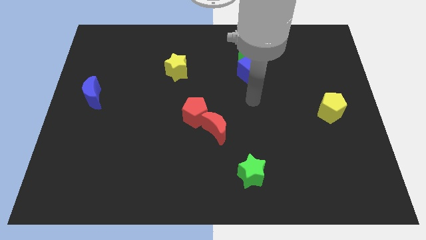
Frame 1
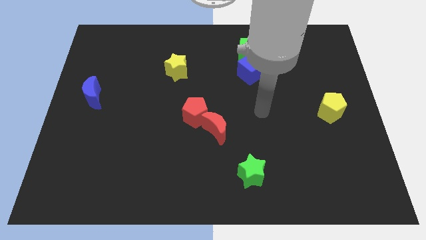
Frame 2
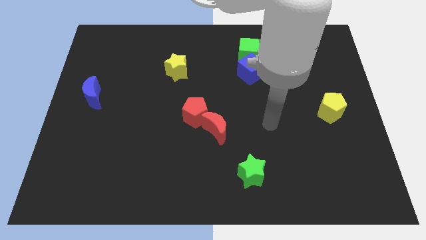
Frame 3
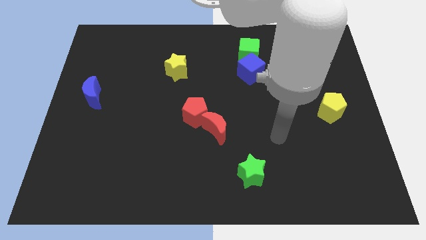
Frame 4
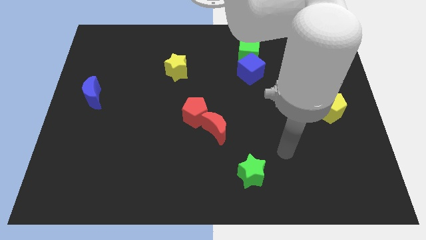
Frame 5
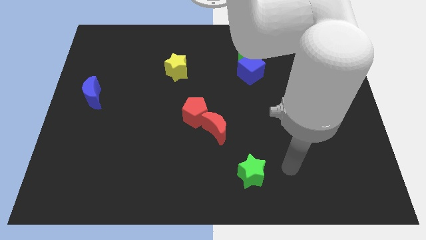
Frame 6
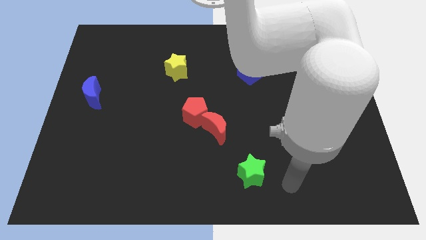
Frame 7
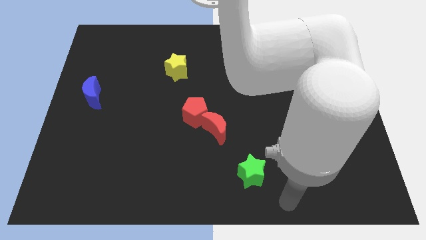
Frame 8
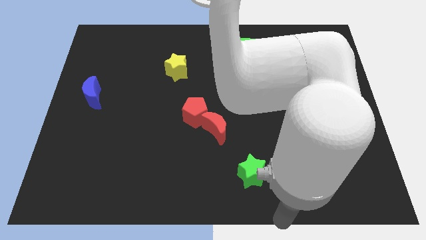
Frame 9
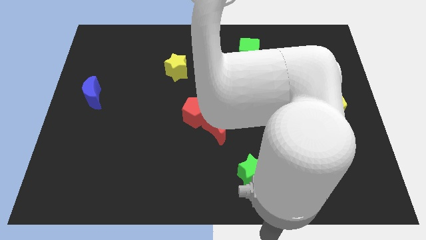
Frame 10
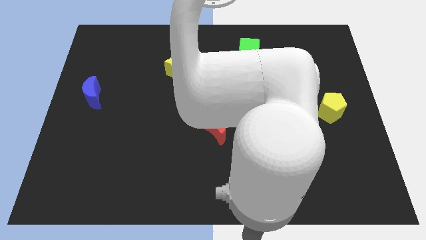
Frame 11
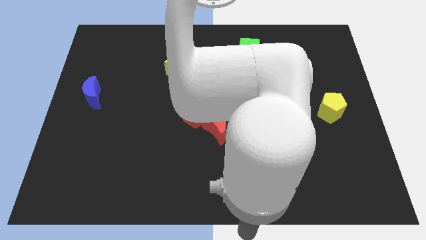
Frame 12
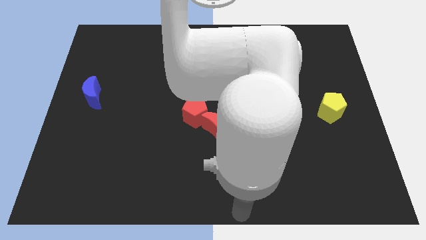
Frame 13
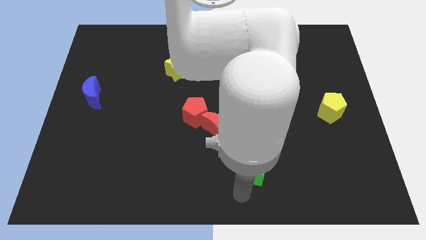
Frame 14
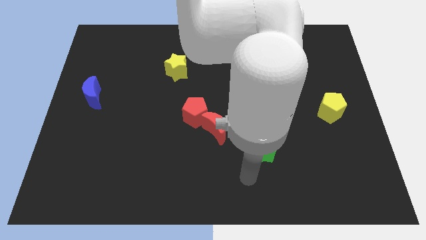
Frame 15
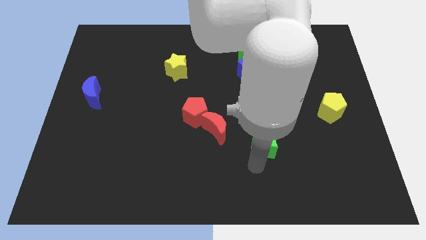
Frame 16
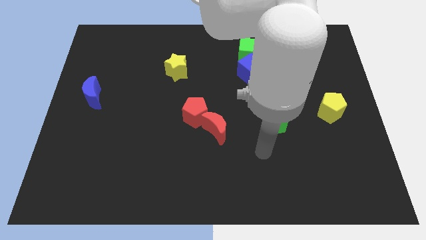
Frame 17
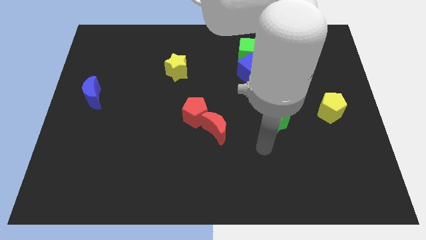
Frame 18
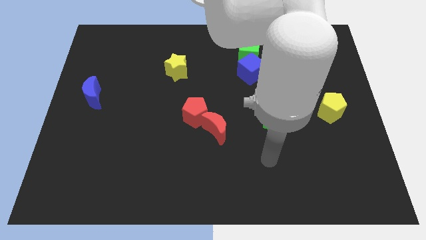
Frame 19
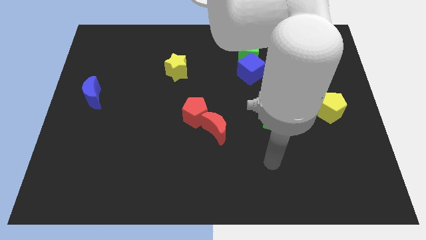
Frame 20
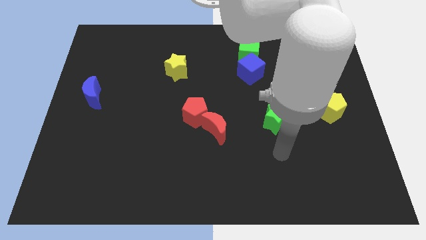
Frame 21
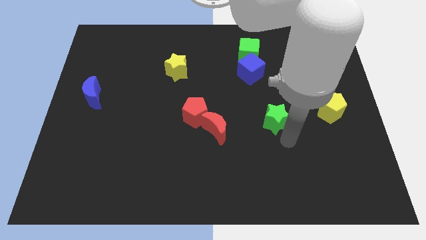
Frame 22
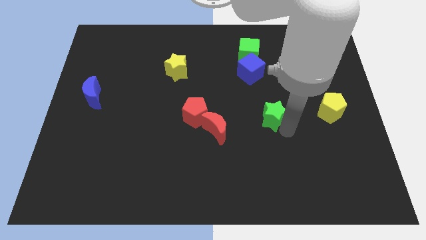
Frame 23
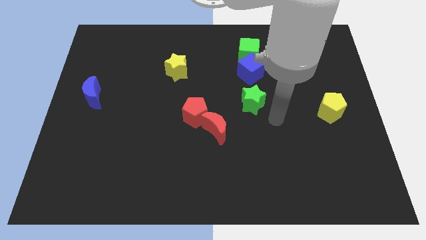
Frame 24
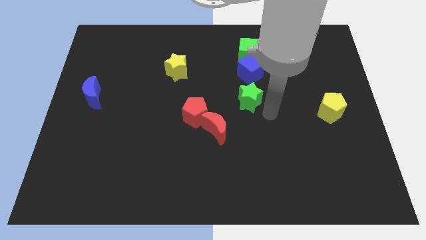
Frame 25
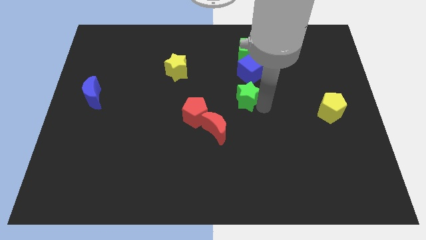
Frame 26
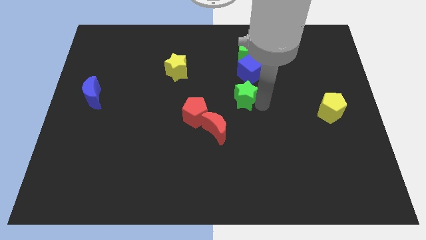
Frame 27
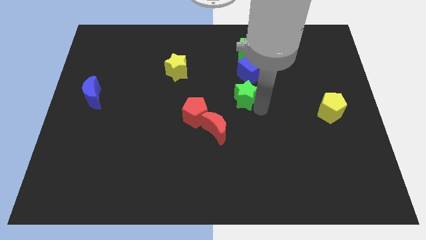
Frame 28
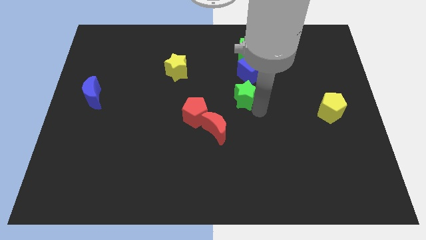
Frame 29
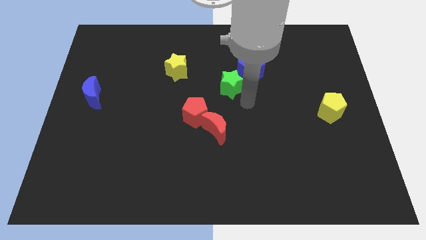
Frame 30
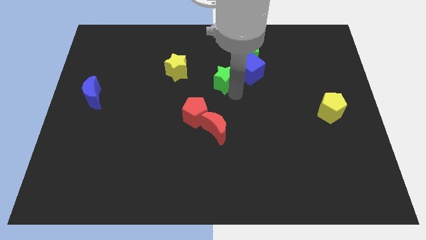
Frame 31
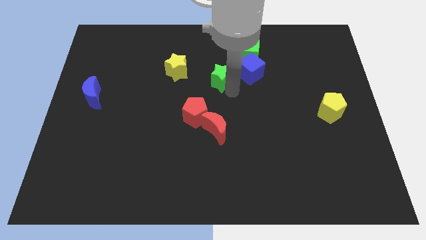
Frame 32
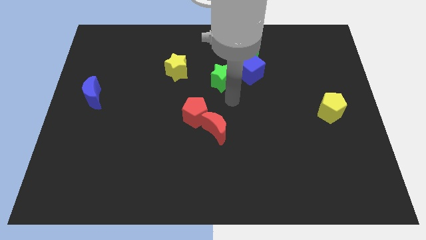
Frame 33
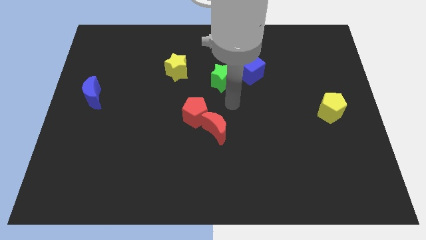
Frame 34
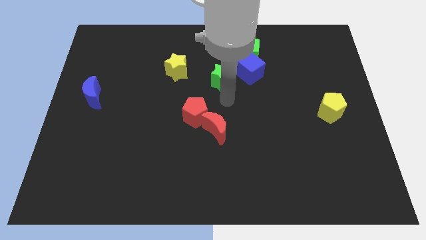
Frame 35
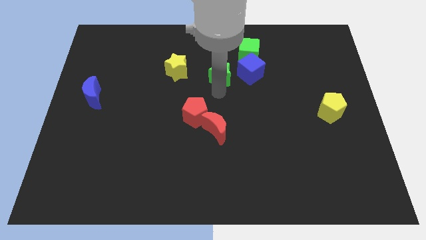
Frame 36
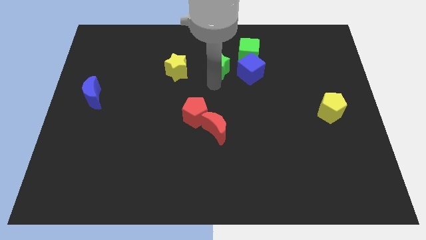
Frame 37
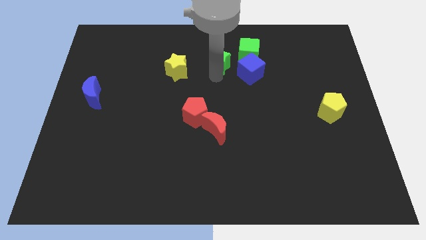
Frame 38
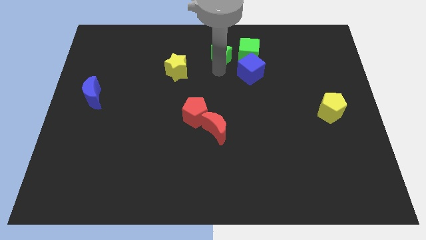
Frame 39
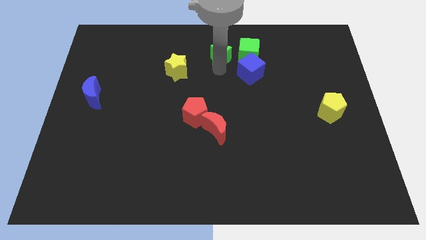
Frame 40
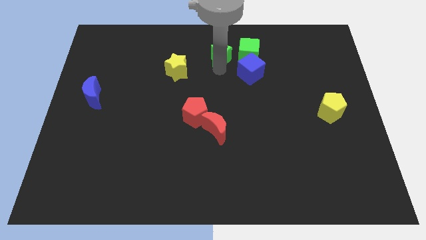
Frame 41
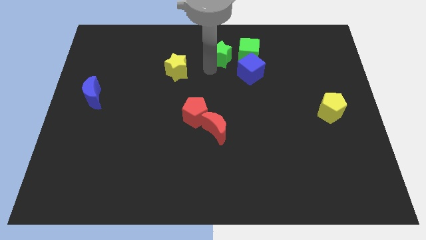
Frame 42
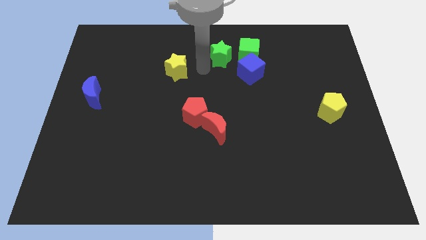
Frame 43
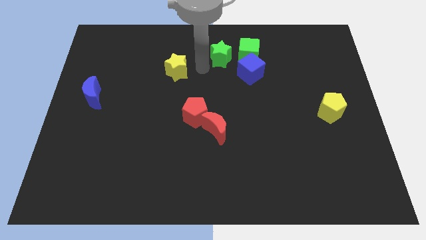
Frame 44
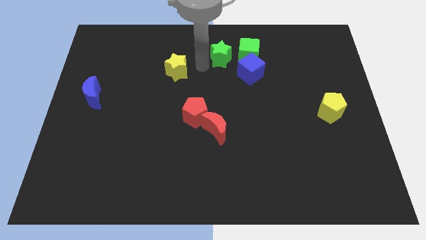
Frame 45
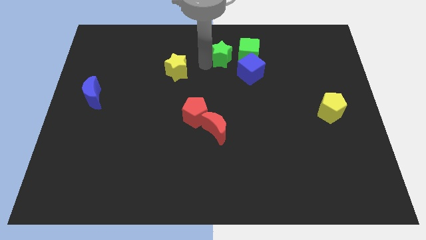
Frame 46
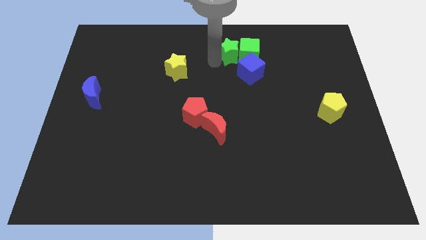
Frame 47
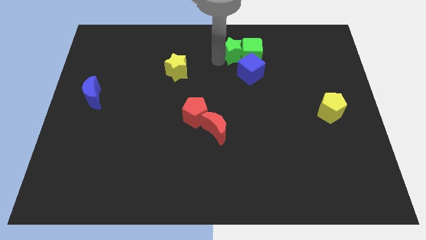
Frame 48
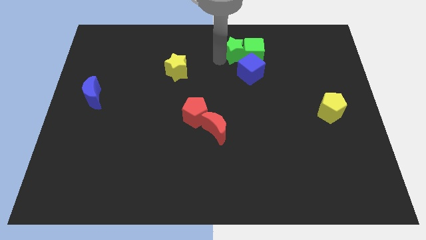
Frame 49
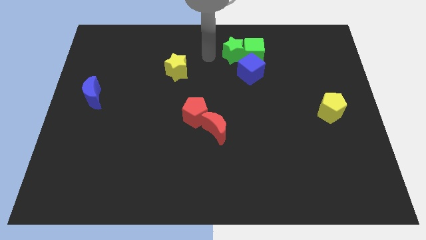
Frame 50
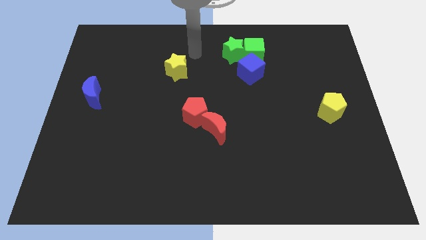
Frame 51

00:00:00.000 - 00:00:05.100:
place the green star beside the left to the green cube

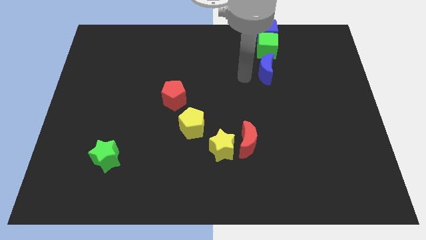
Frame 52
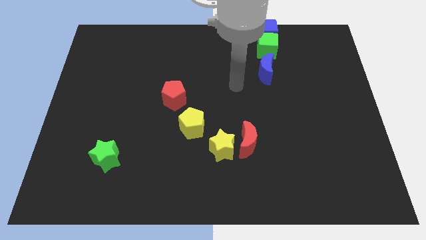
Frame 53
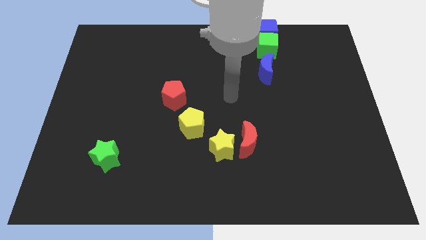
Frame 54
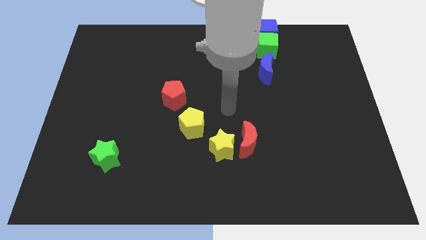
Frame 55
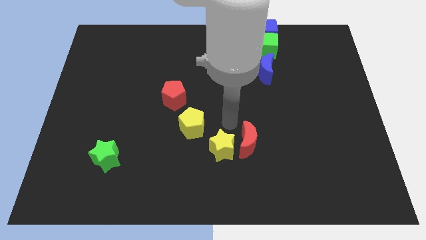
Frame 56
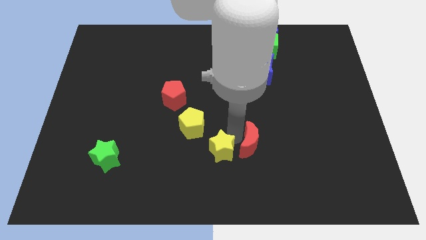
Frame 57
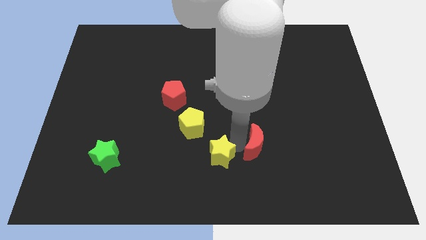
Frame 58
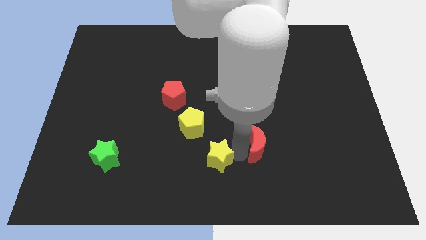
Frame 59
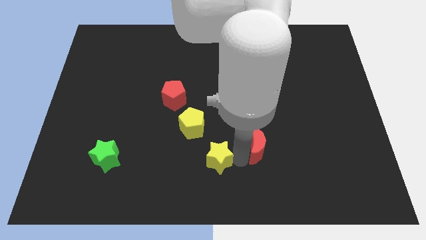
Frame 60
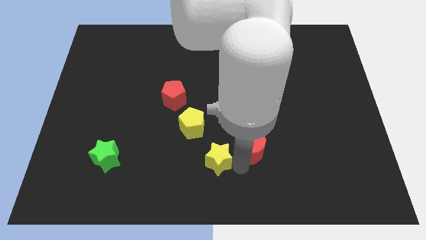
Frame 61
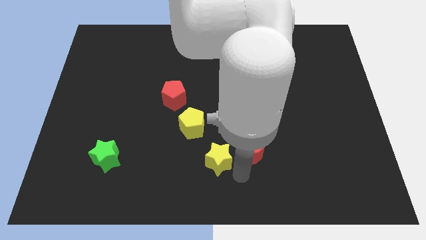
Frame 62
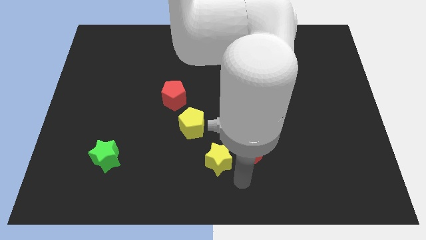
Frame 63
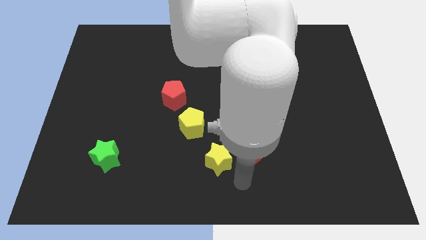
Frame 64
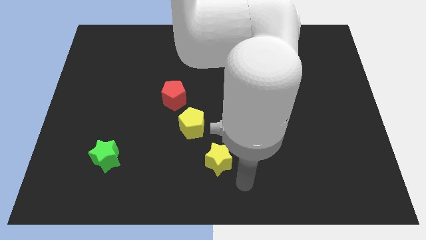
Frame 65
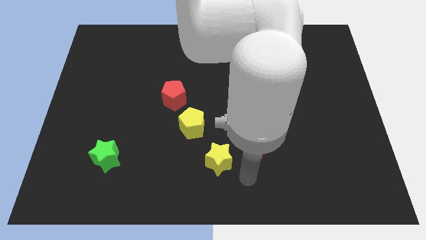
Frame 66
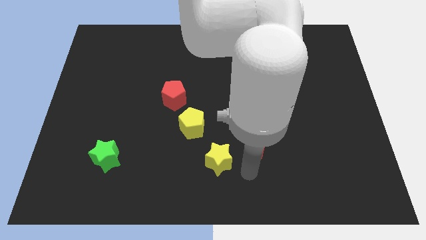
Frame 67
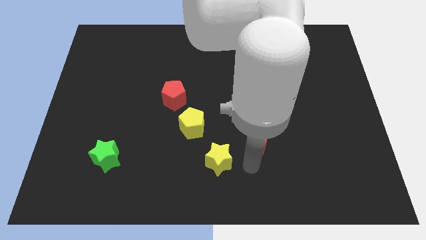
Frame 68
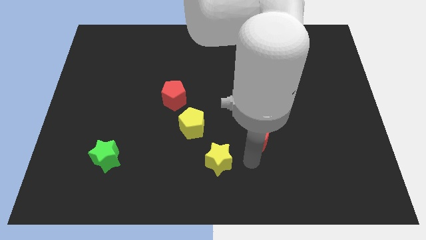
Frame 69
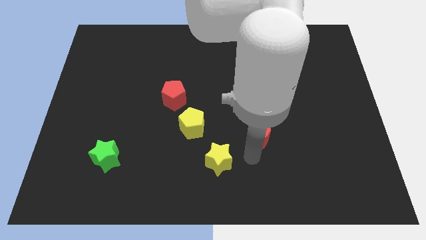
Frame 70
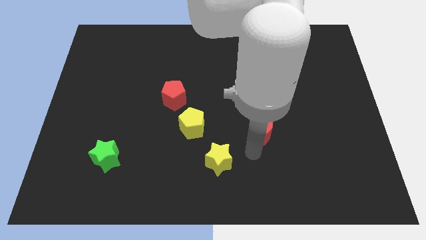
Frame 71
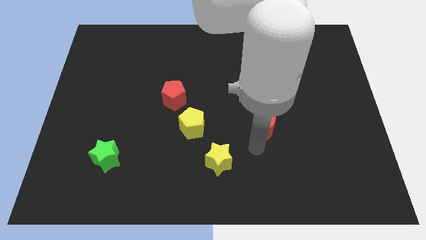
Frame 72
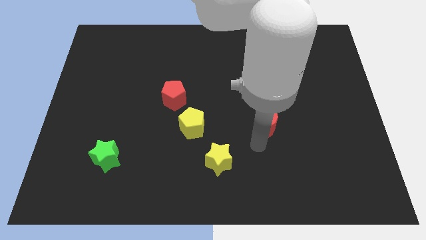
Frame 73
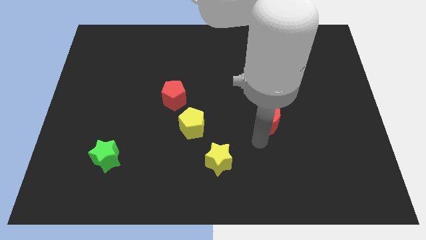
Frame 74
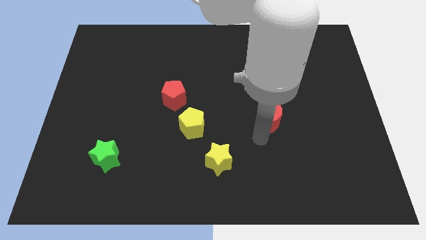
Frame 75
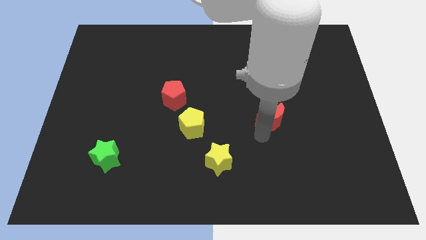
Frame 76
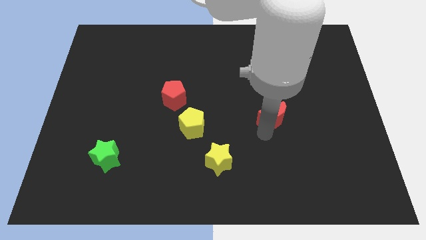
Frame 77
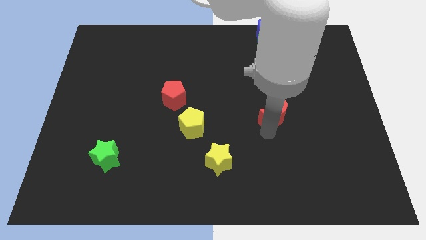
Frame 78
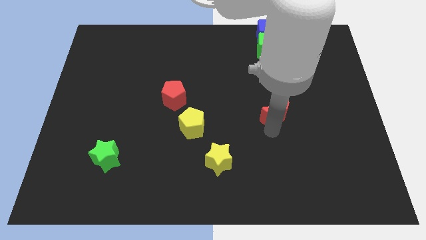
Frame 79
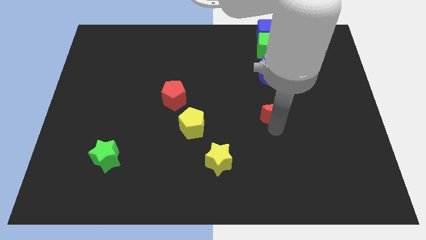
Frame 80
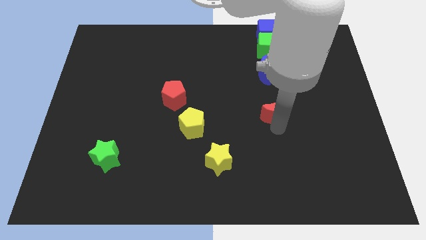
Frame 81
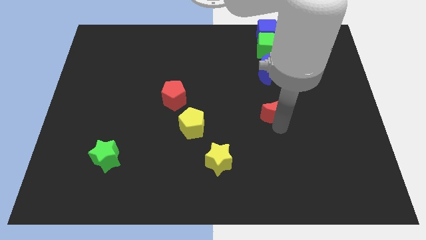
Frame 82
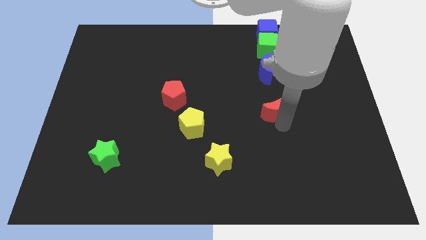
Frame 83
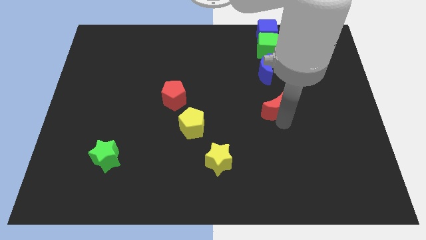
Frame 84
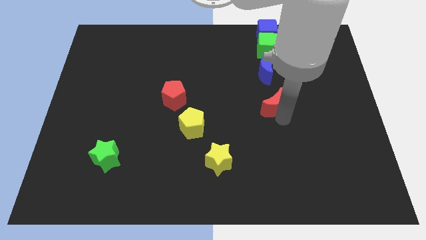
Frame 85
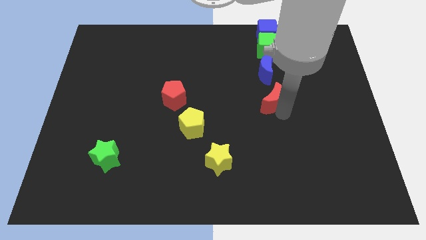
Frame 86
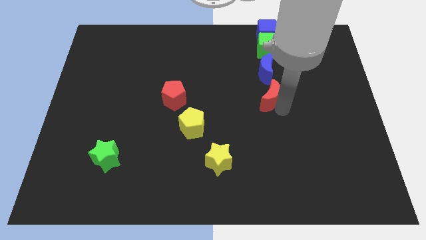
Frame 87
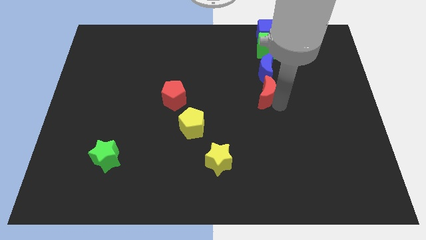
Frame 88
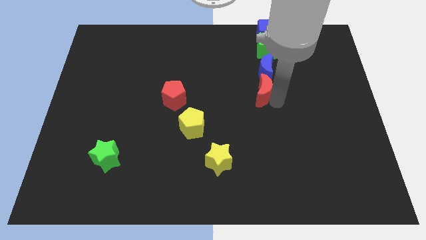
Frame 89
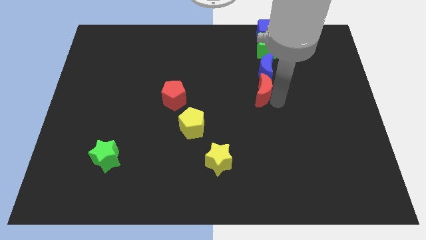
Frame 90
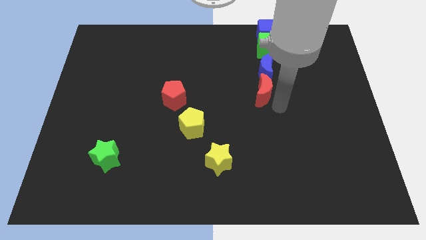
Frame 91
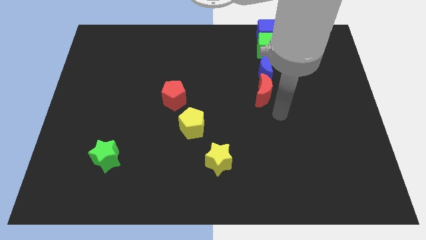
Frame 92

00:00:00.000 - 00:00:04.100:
move the red crescent into the blue crescent
